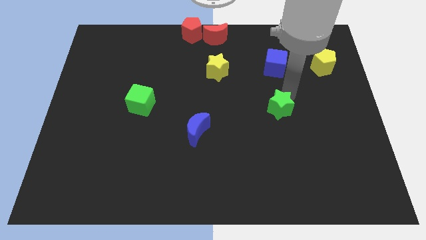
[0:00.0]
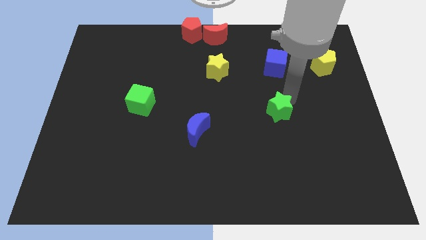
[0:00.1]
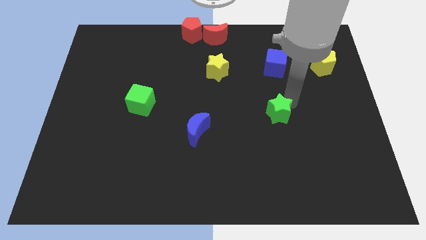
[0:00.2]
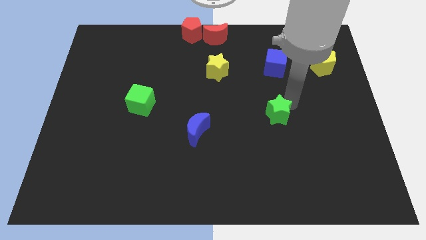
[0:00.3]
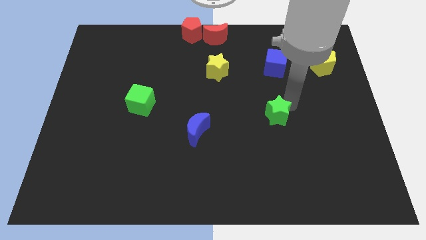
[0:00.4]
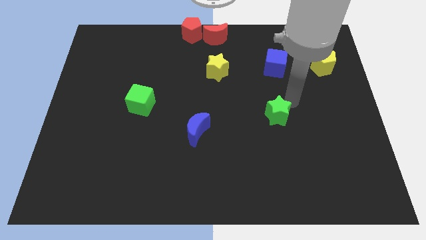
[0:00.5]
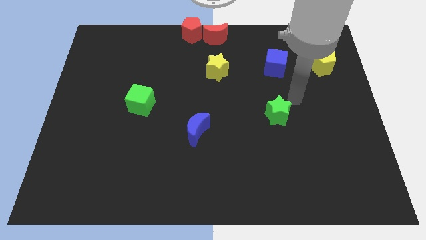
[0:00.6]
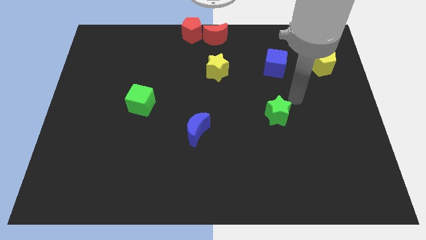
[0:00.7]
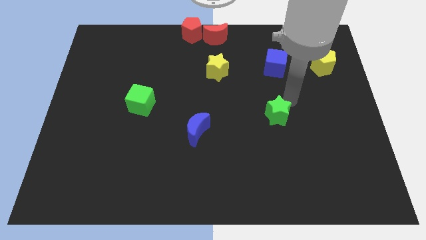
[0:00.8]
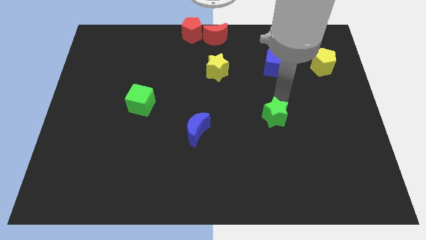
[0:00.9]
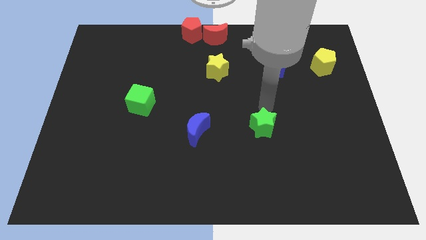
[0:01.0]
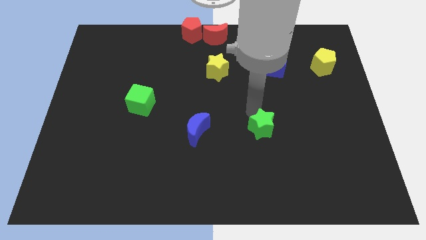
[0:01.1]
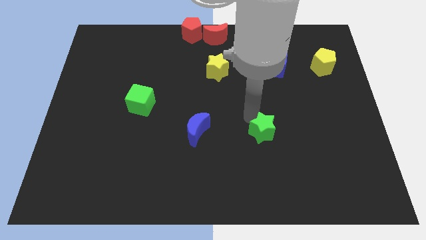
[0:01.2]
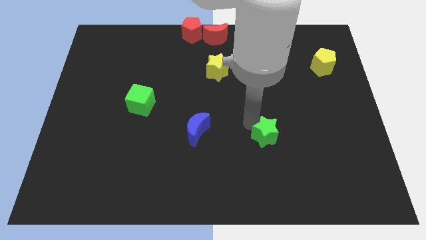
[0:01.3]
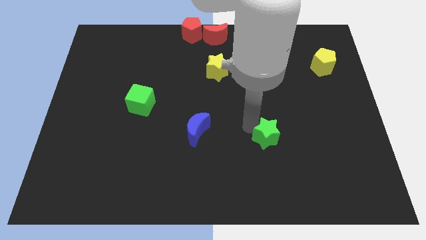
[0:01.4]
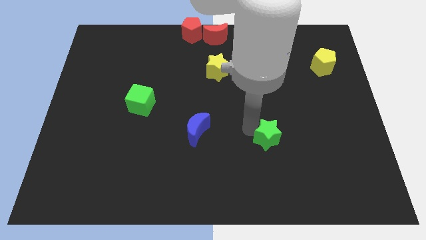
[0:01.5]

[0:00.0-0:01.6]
place the green star to the right of blue moon

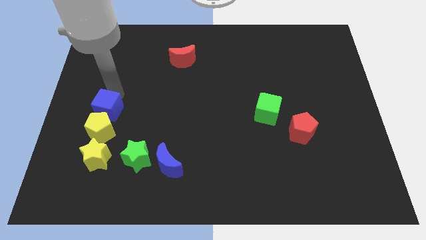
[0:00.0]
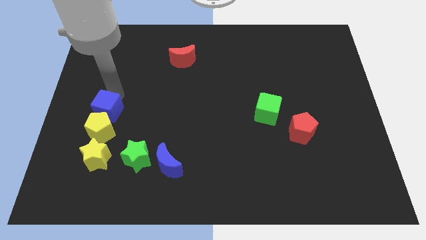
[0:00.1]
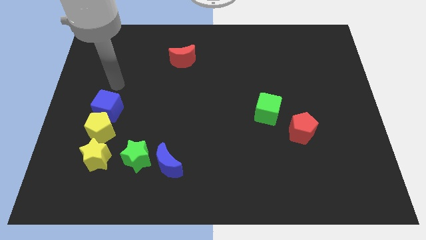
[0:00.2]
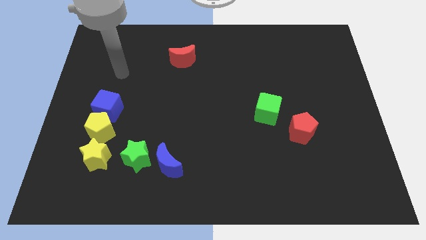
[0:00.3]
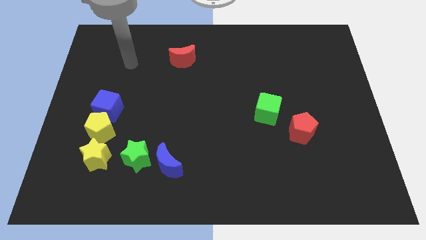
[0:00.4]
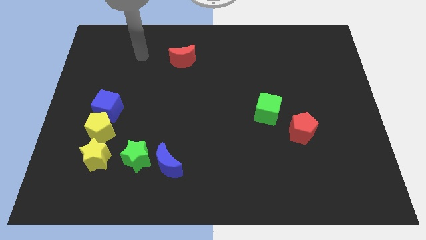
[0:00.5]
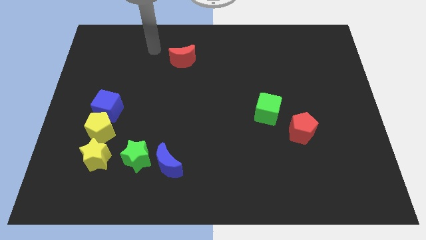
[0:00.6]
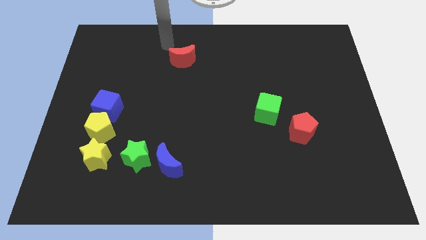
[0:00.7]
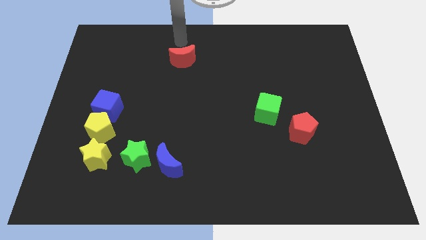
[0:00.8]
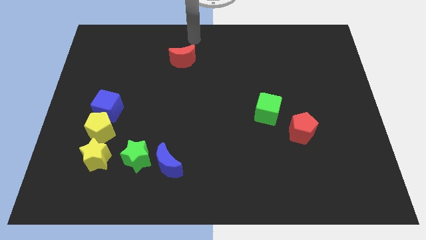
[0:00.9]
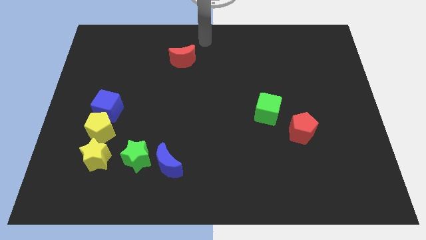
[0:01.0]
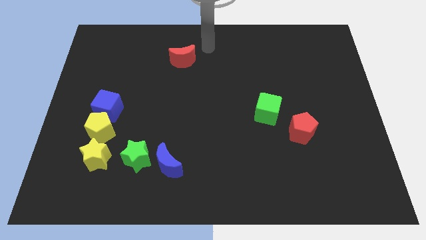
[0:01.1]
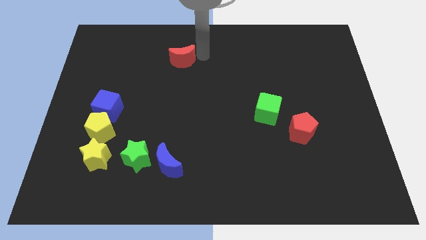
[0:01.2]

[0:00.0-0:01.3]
place arm on the top of red moon

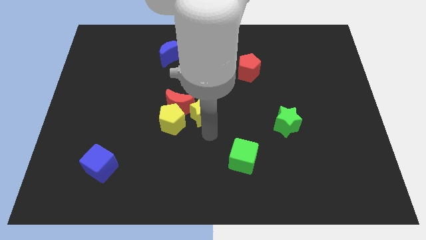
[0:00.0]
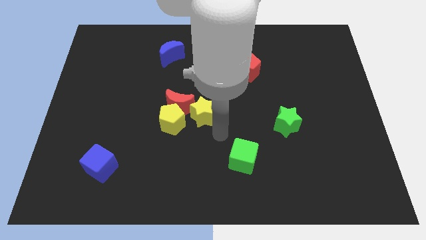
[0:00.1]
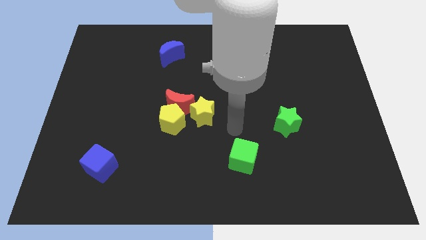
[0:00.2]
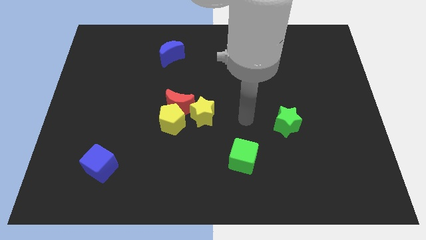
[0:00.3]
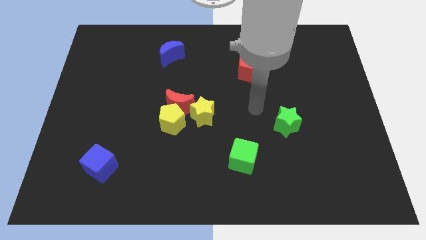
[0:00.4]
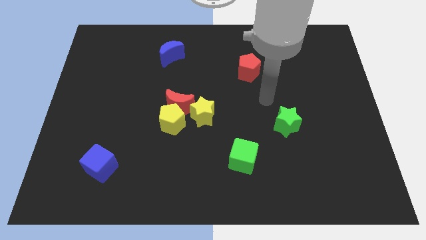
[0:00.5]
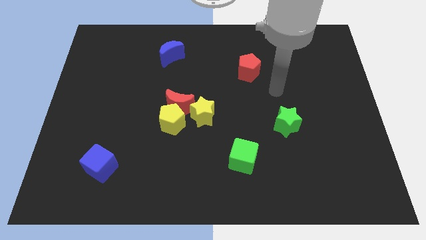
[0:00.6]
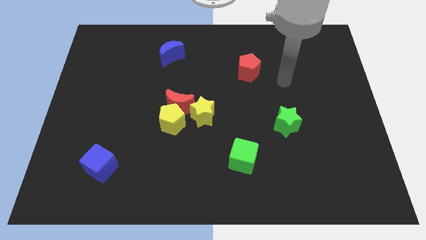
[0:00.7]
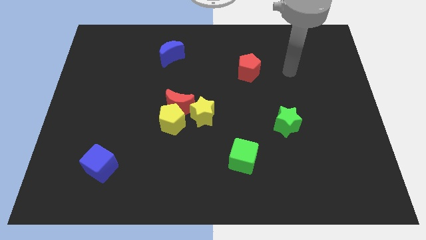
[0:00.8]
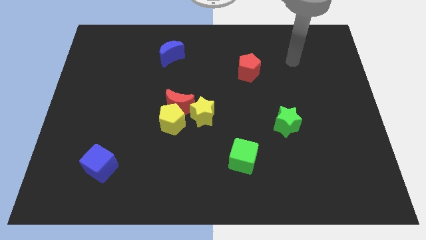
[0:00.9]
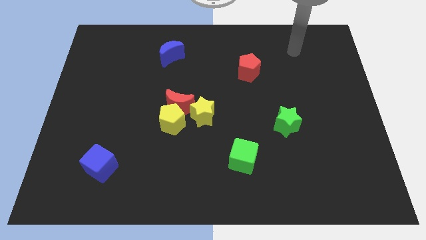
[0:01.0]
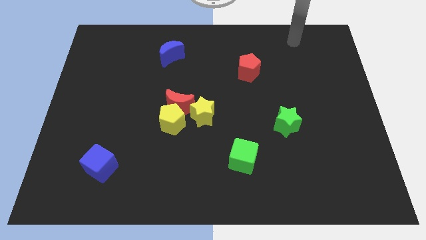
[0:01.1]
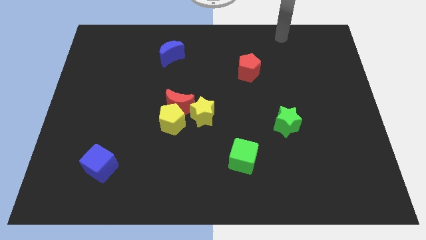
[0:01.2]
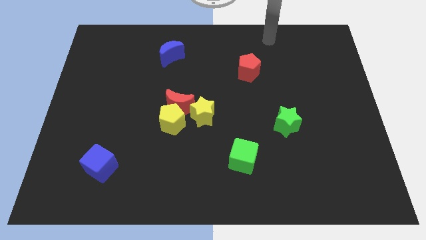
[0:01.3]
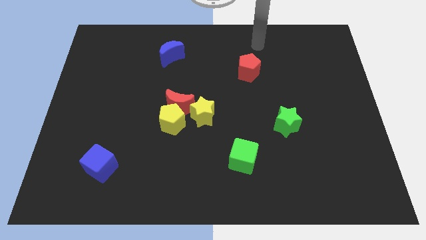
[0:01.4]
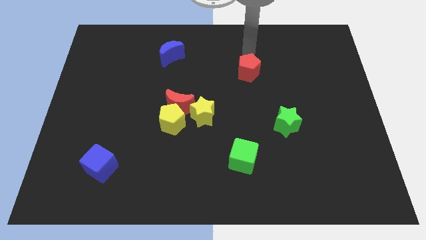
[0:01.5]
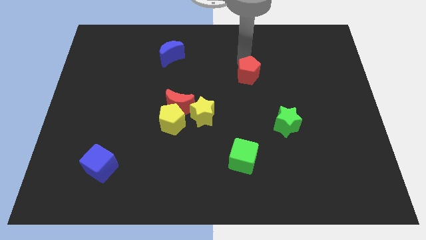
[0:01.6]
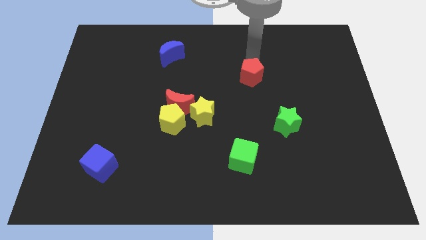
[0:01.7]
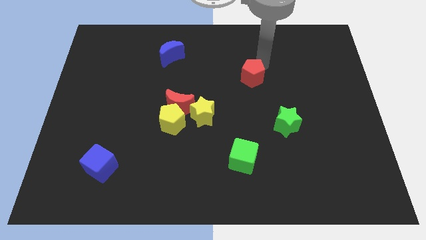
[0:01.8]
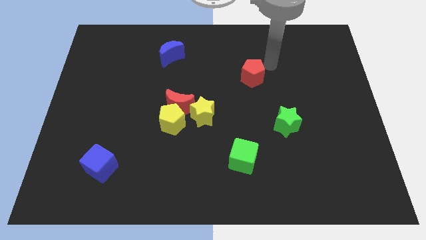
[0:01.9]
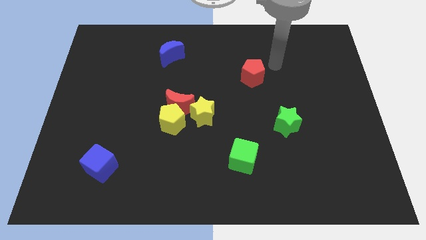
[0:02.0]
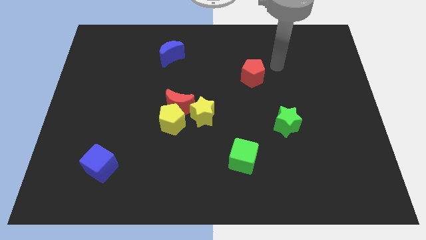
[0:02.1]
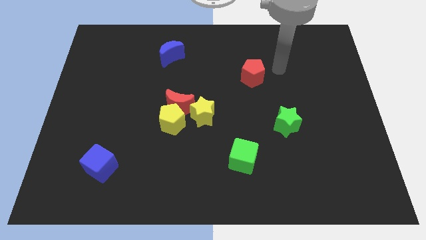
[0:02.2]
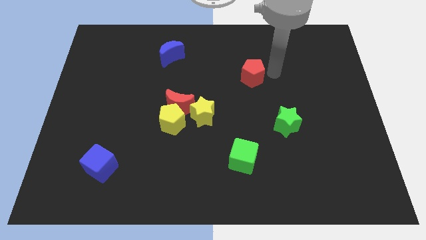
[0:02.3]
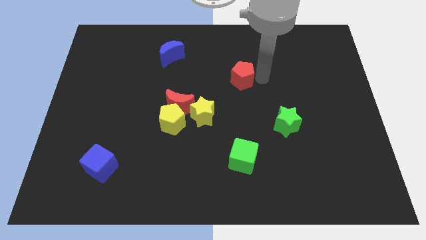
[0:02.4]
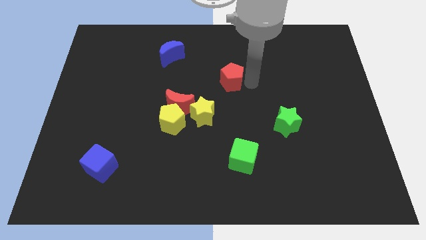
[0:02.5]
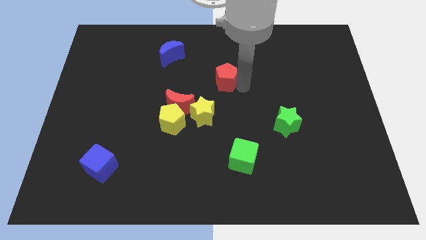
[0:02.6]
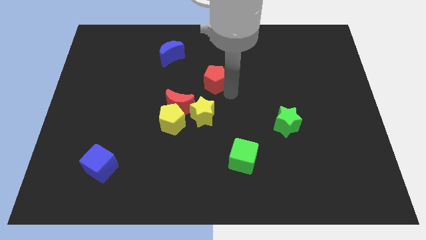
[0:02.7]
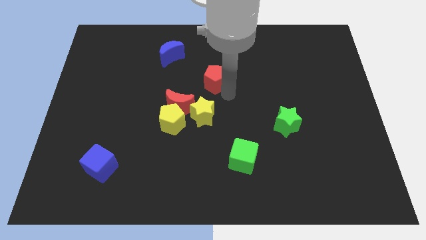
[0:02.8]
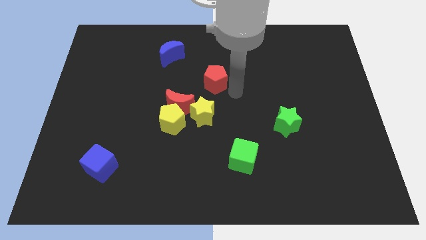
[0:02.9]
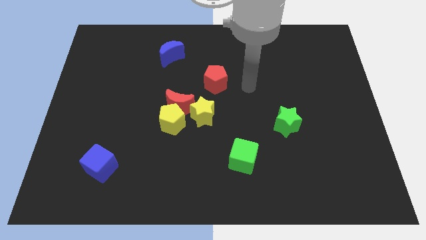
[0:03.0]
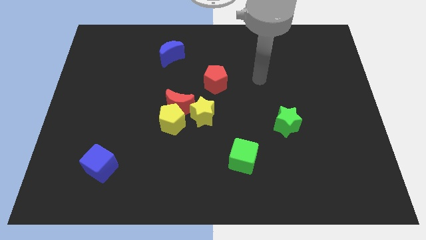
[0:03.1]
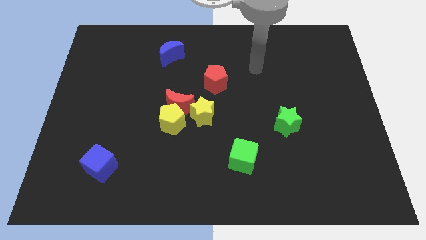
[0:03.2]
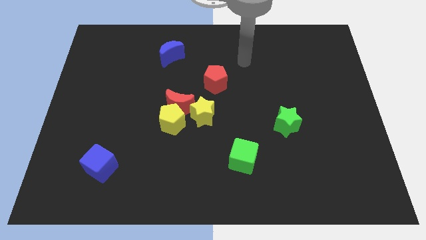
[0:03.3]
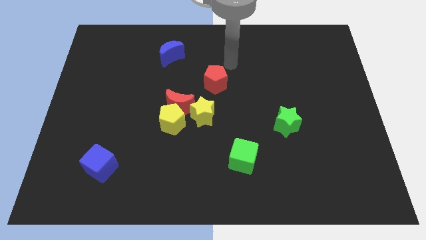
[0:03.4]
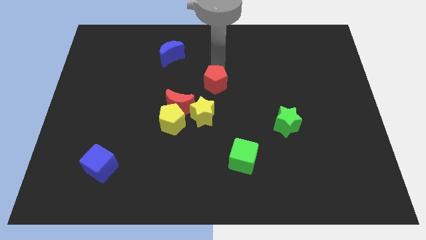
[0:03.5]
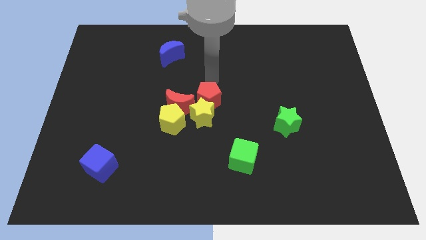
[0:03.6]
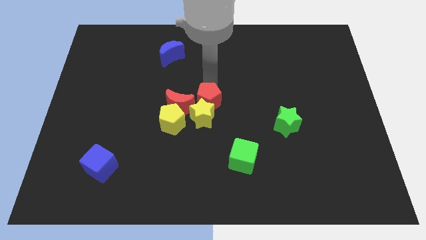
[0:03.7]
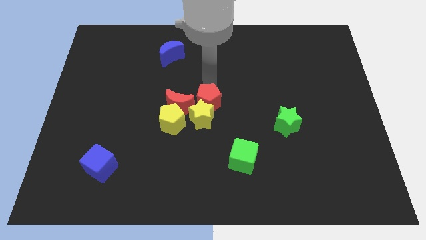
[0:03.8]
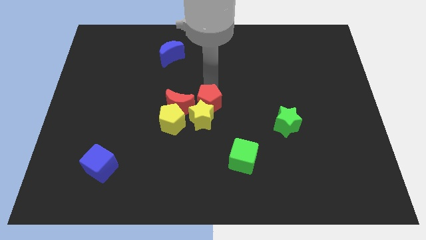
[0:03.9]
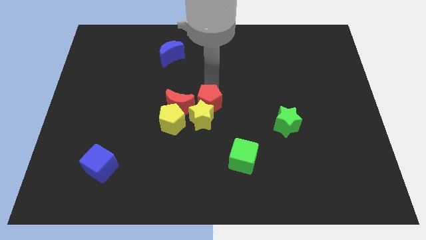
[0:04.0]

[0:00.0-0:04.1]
place red pentagon above the yellow star

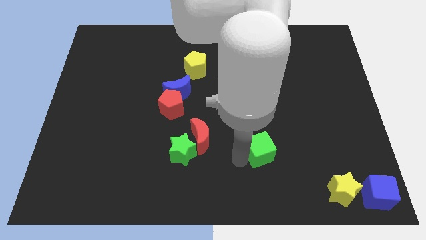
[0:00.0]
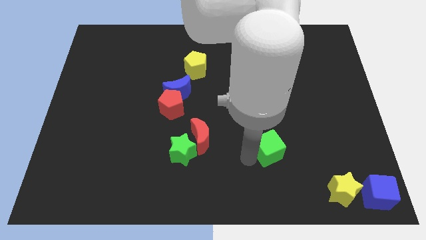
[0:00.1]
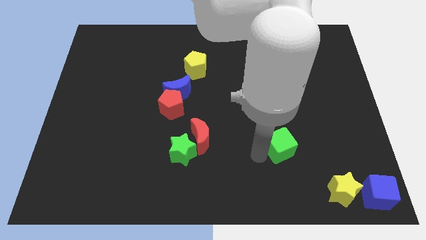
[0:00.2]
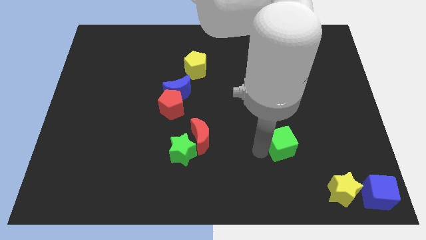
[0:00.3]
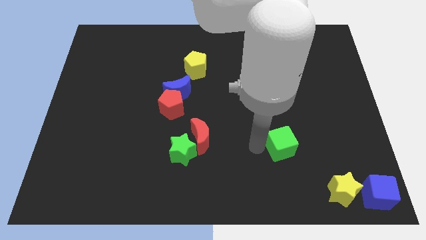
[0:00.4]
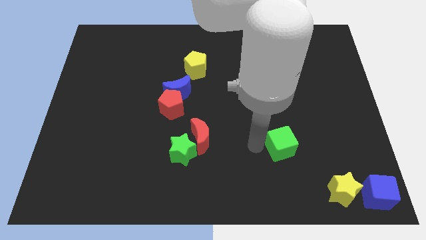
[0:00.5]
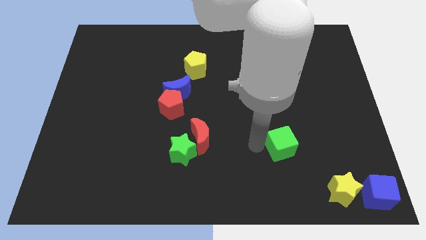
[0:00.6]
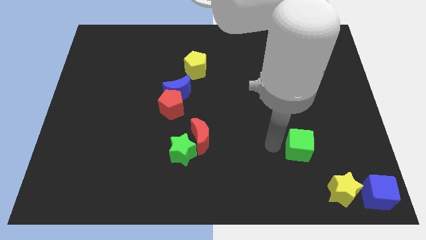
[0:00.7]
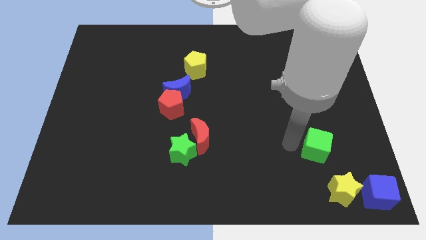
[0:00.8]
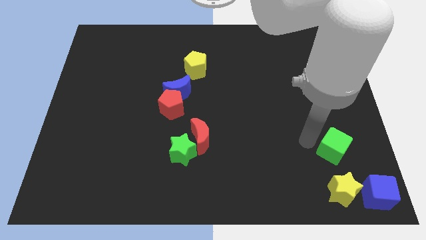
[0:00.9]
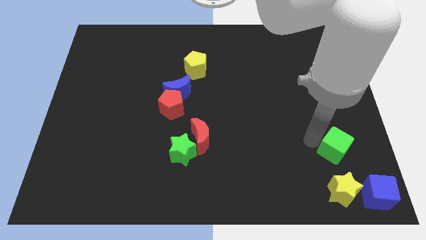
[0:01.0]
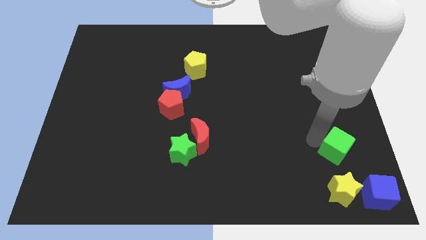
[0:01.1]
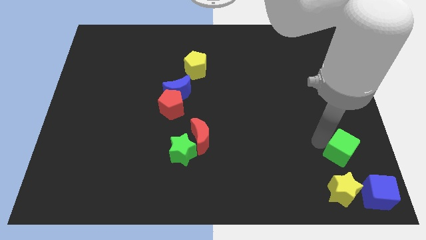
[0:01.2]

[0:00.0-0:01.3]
push the green cube to the top of the yellow star

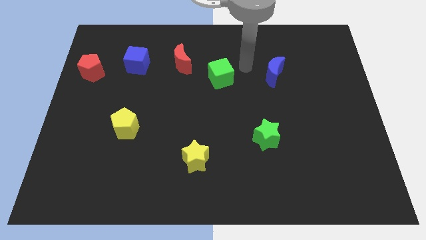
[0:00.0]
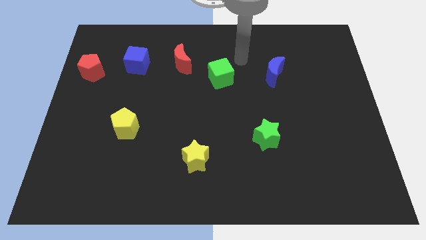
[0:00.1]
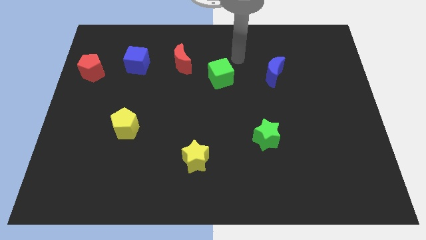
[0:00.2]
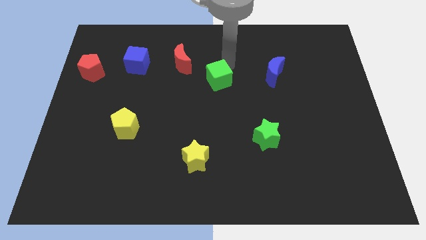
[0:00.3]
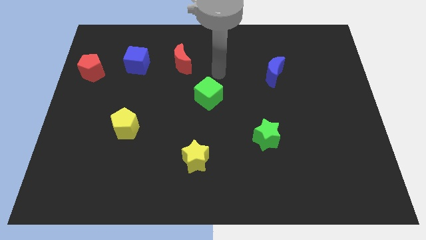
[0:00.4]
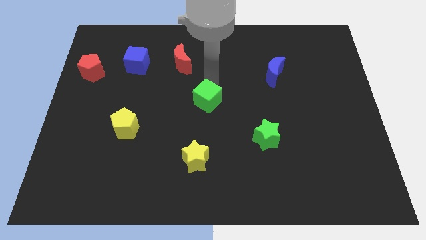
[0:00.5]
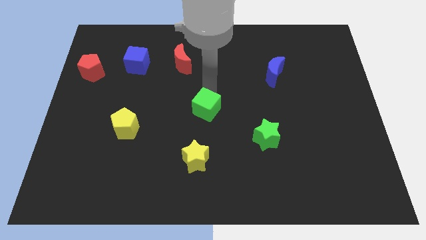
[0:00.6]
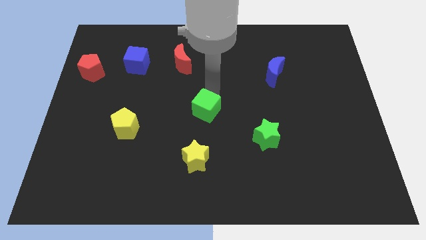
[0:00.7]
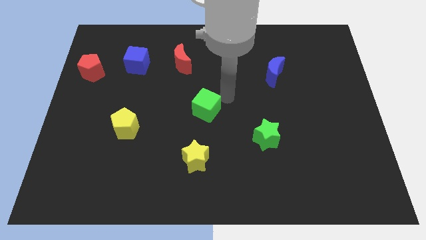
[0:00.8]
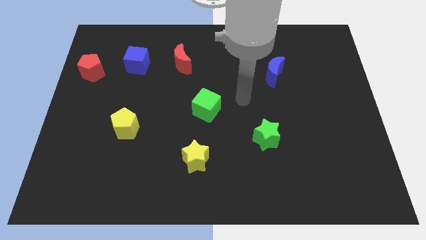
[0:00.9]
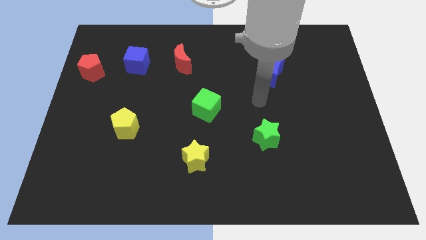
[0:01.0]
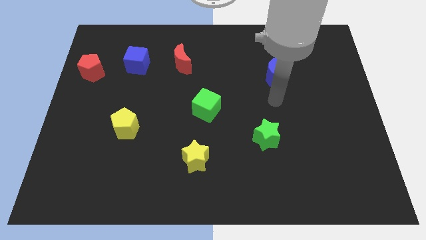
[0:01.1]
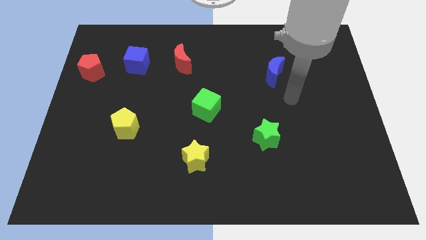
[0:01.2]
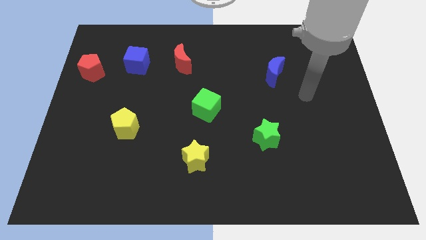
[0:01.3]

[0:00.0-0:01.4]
drag the green cube diagonally bottom left to the blue moon
